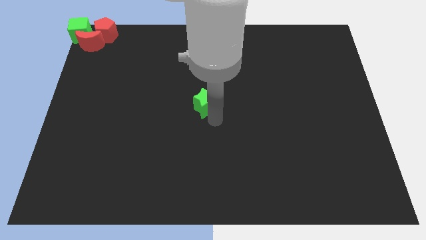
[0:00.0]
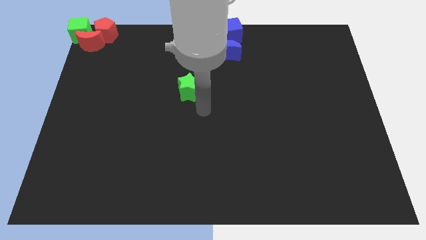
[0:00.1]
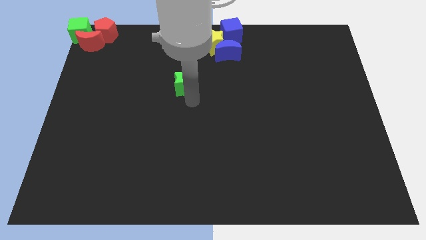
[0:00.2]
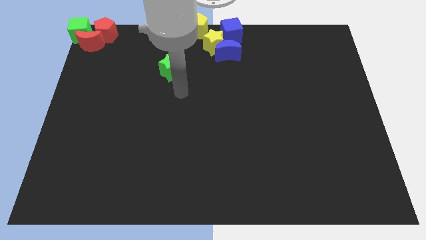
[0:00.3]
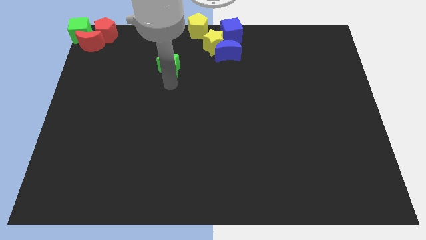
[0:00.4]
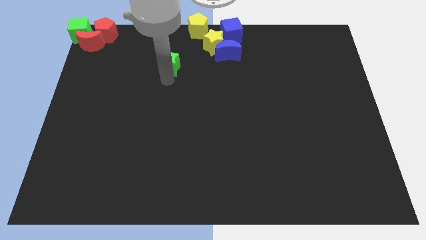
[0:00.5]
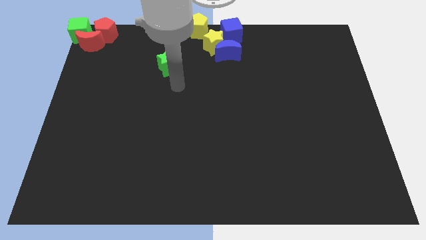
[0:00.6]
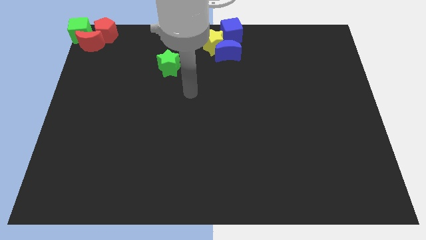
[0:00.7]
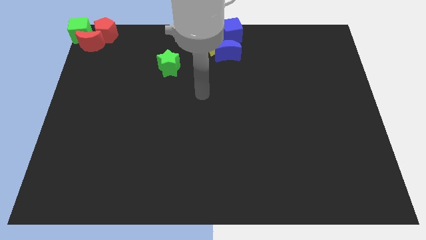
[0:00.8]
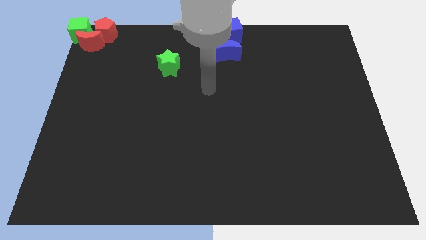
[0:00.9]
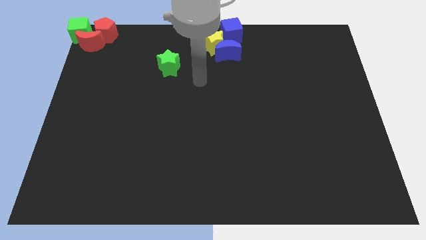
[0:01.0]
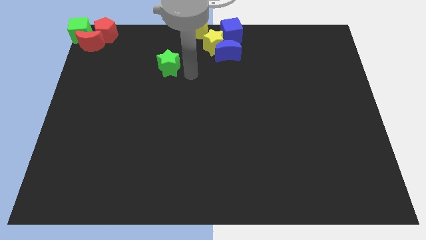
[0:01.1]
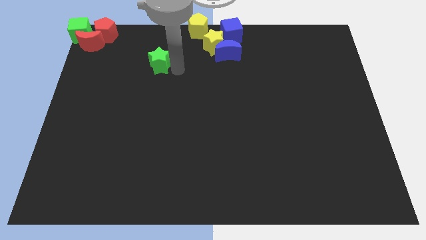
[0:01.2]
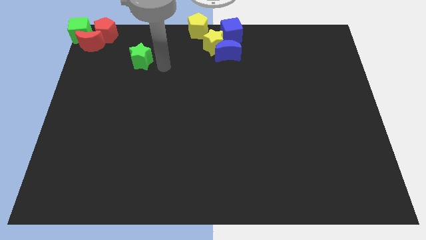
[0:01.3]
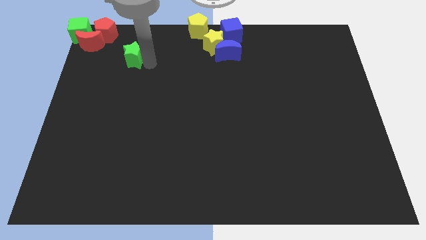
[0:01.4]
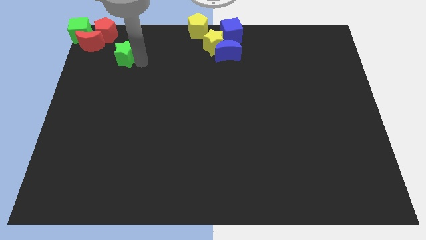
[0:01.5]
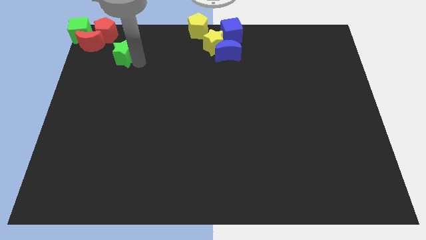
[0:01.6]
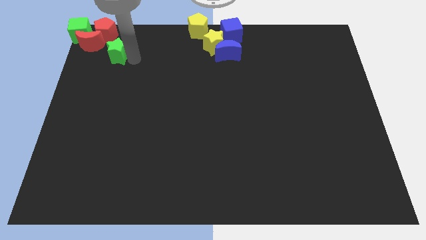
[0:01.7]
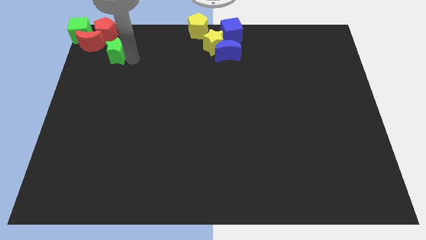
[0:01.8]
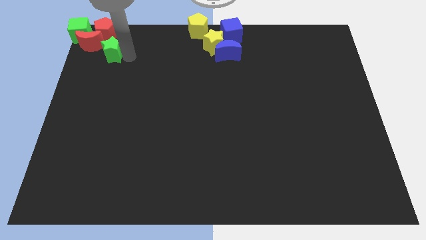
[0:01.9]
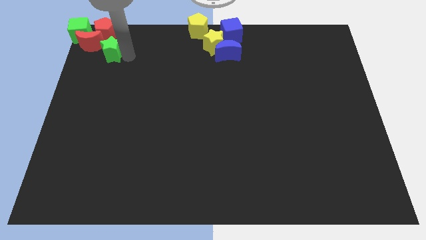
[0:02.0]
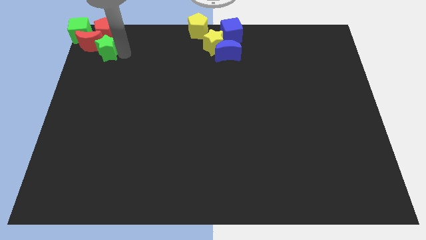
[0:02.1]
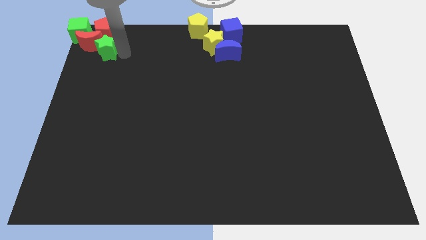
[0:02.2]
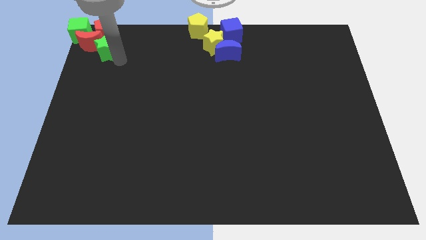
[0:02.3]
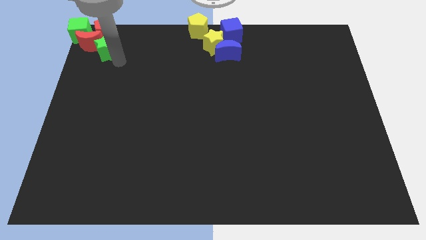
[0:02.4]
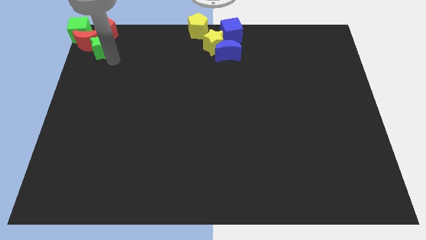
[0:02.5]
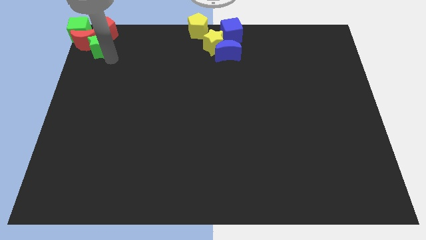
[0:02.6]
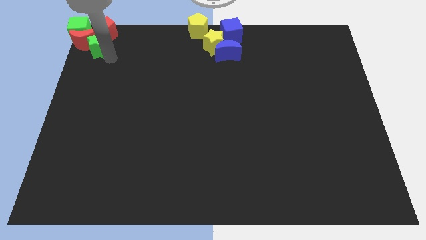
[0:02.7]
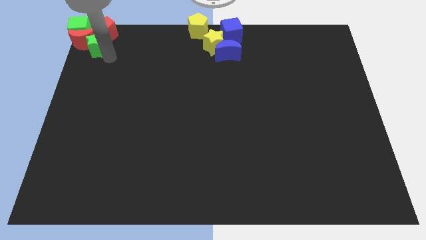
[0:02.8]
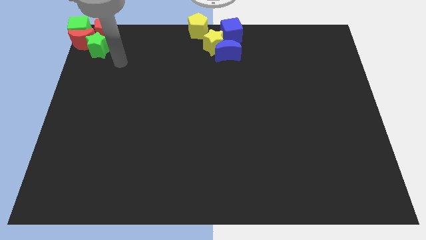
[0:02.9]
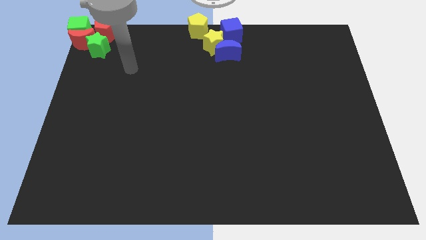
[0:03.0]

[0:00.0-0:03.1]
push green star into red pentagon

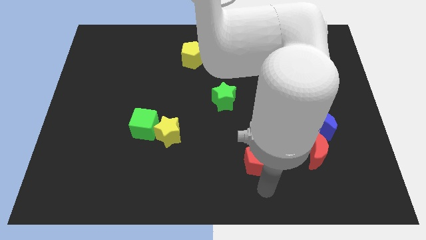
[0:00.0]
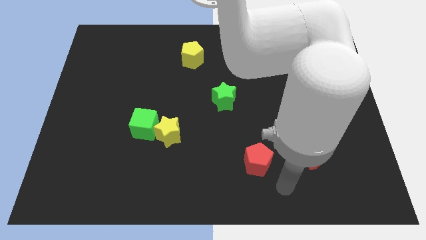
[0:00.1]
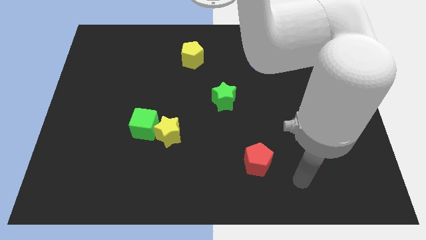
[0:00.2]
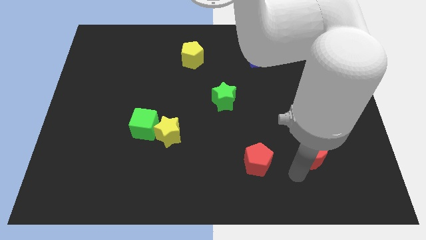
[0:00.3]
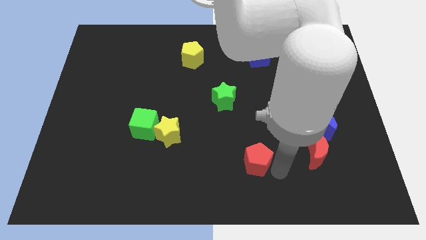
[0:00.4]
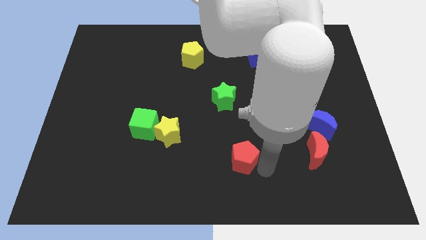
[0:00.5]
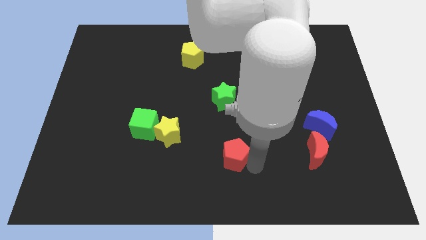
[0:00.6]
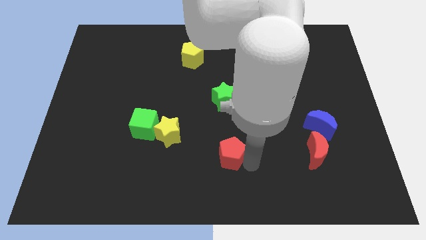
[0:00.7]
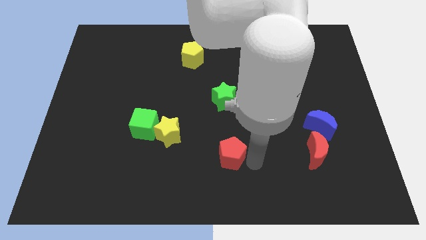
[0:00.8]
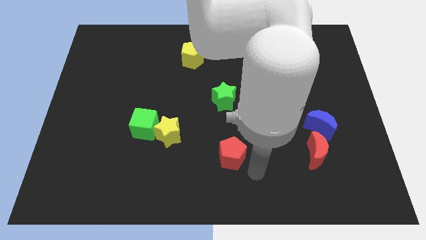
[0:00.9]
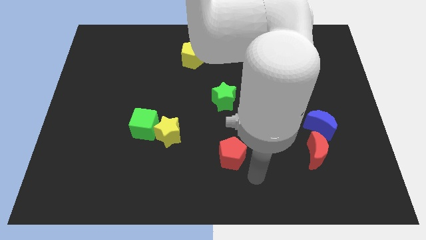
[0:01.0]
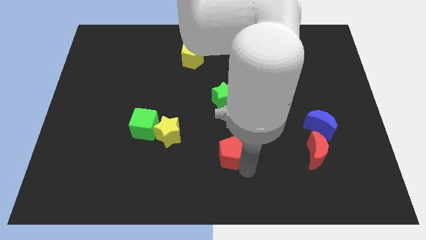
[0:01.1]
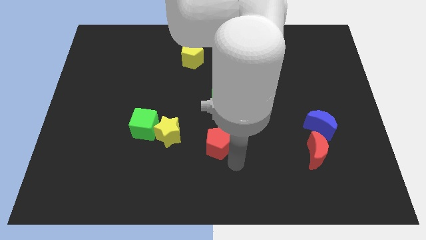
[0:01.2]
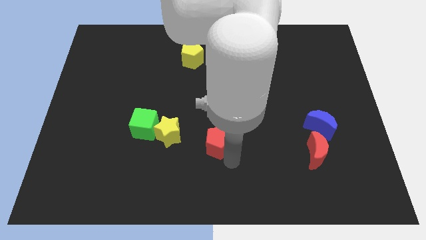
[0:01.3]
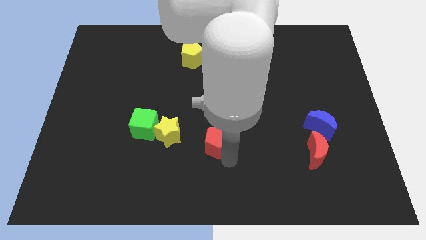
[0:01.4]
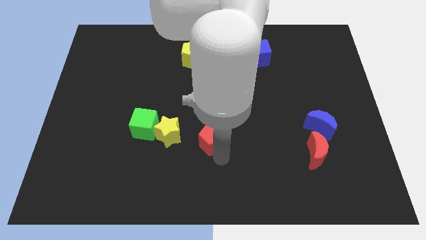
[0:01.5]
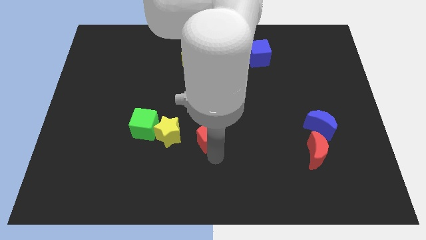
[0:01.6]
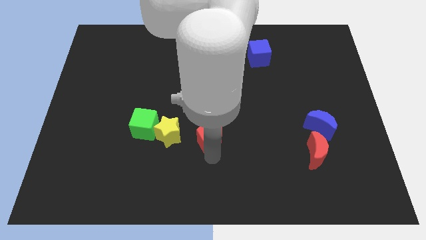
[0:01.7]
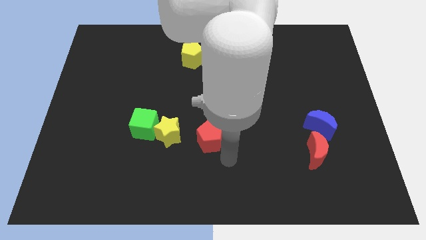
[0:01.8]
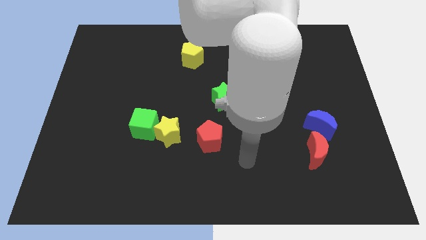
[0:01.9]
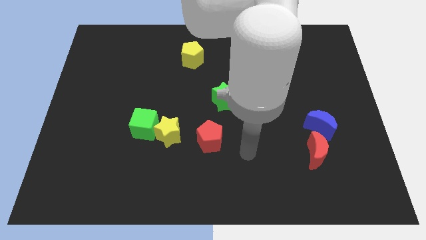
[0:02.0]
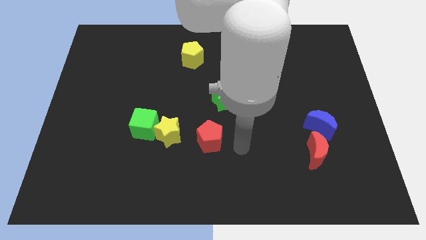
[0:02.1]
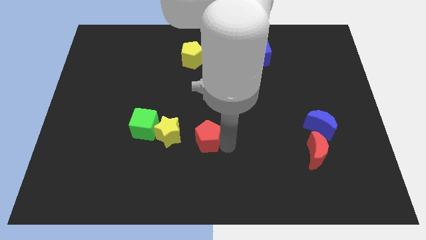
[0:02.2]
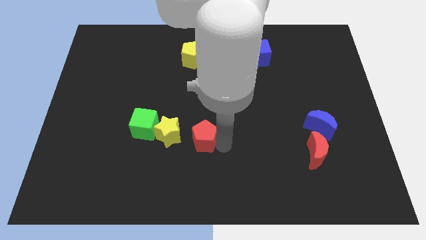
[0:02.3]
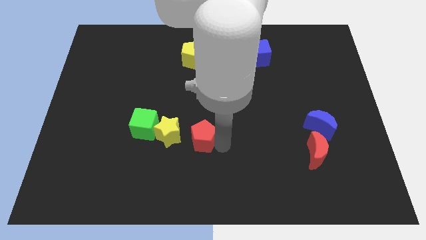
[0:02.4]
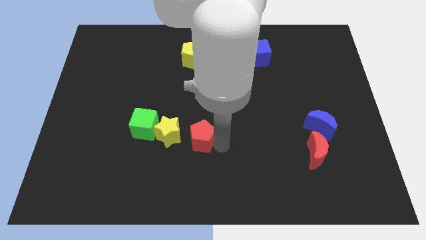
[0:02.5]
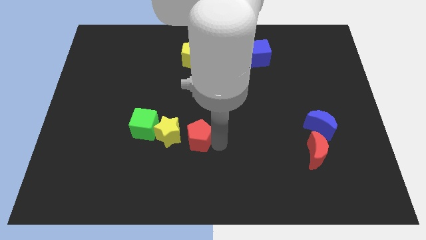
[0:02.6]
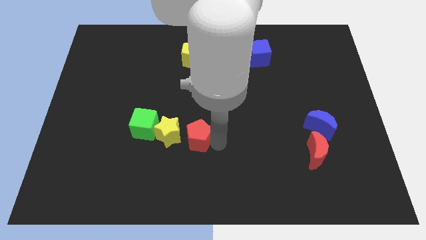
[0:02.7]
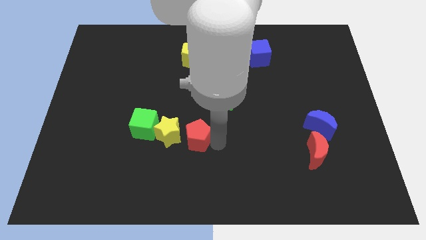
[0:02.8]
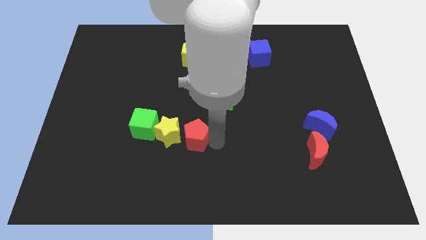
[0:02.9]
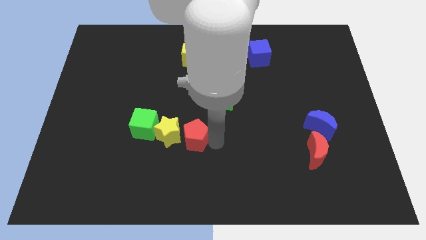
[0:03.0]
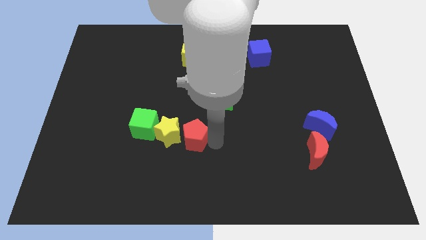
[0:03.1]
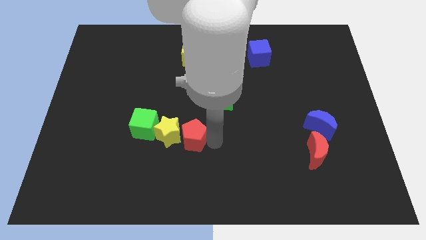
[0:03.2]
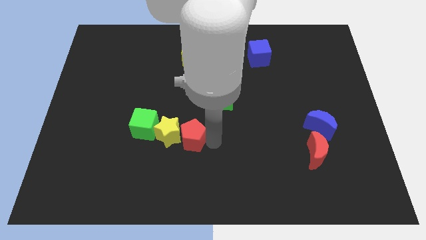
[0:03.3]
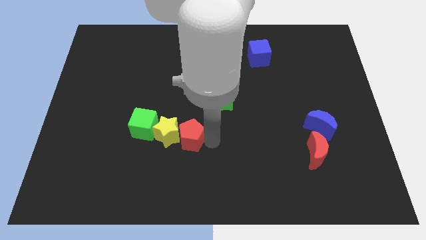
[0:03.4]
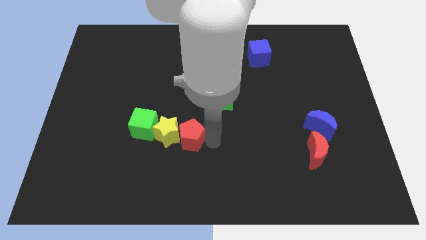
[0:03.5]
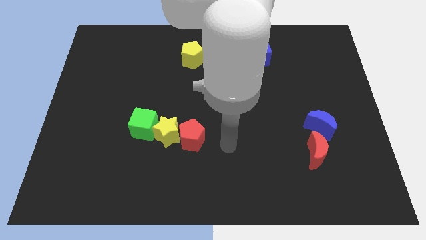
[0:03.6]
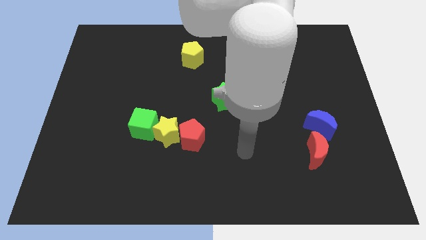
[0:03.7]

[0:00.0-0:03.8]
slide red pentagon close to the yellow star

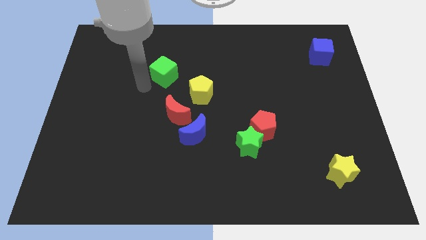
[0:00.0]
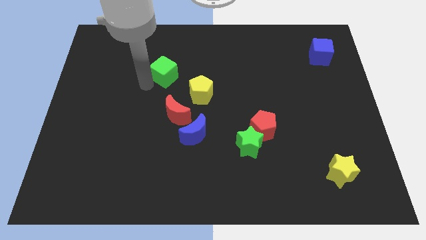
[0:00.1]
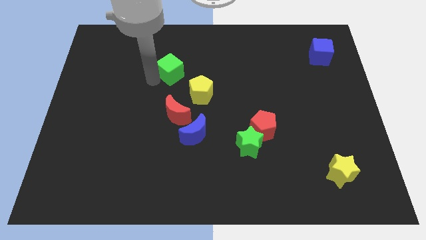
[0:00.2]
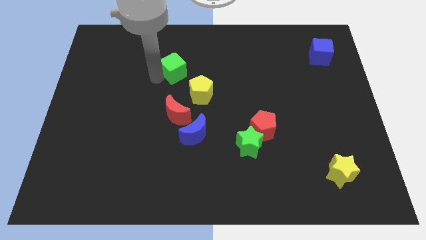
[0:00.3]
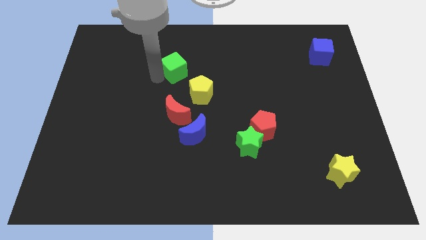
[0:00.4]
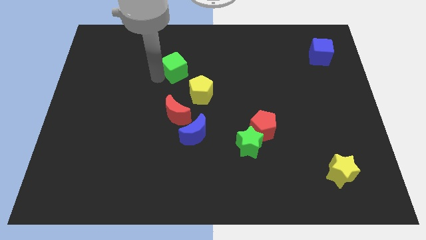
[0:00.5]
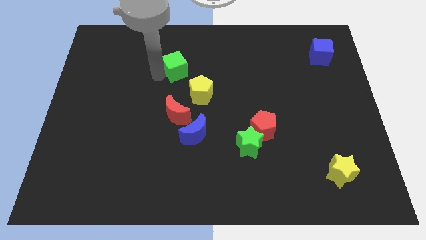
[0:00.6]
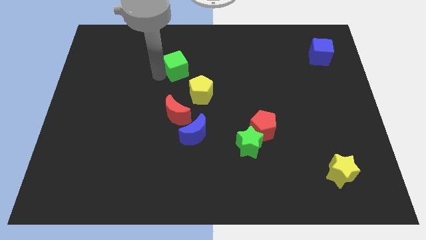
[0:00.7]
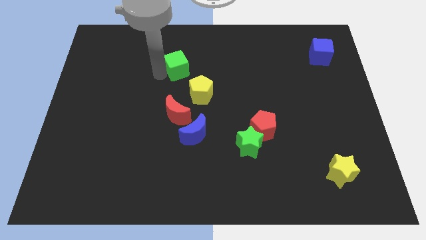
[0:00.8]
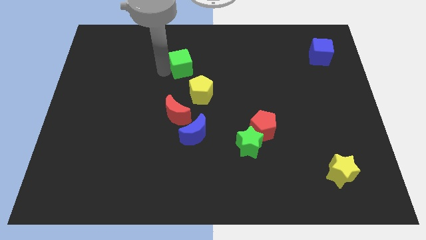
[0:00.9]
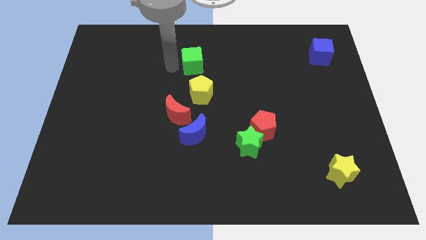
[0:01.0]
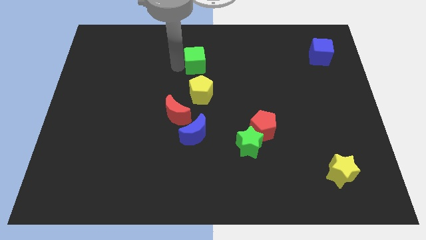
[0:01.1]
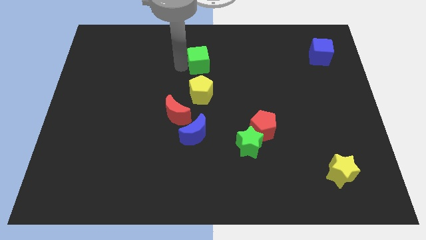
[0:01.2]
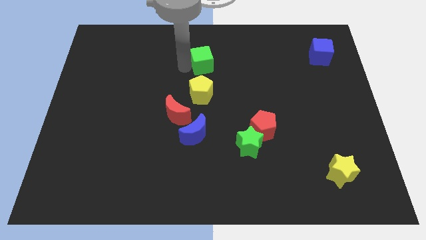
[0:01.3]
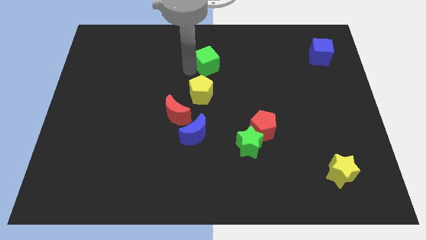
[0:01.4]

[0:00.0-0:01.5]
push green cube above yellow pentagon

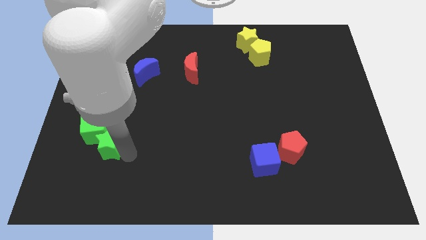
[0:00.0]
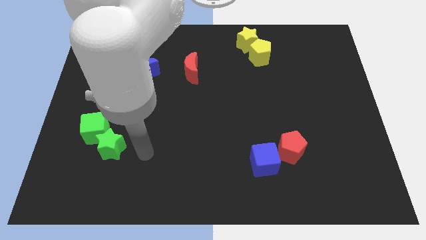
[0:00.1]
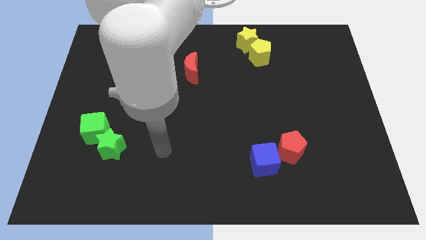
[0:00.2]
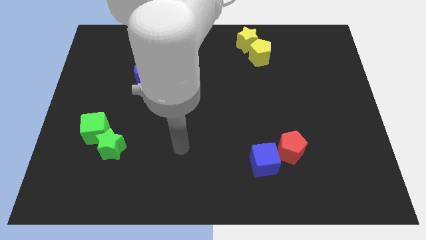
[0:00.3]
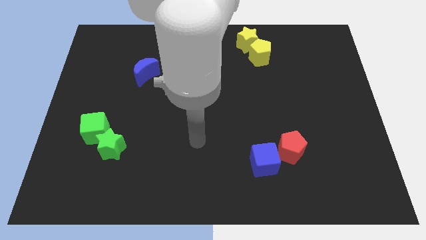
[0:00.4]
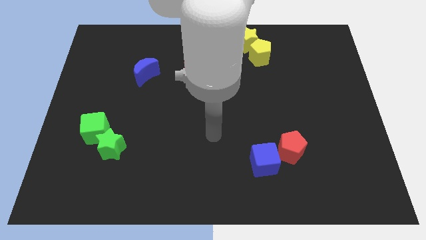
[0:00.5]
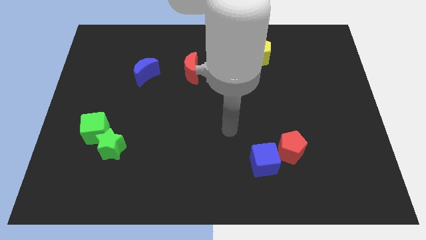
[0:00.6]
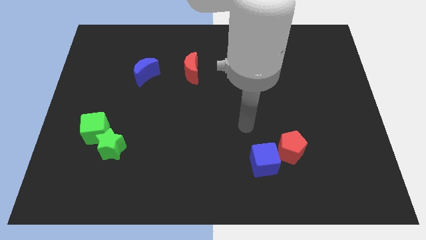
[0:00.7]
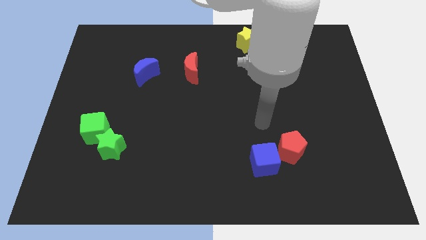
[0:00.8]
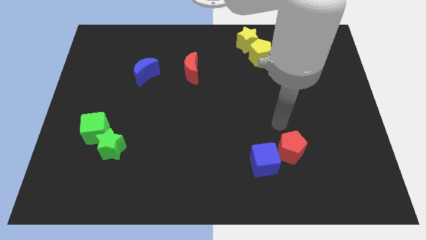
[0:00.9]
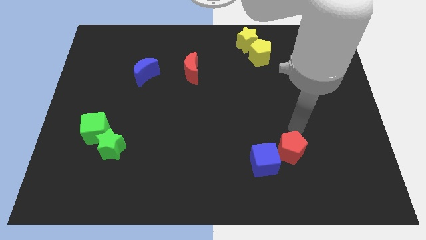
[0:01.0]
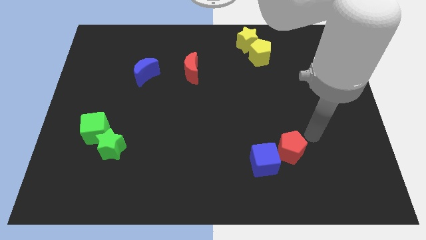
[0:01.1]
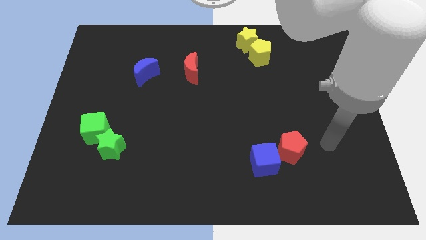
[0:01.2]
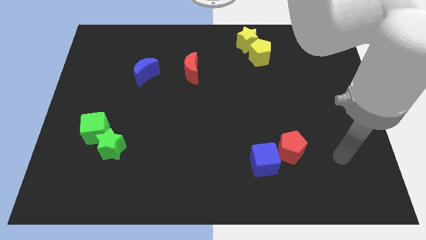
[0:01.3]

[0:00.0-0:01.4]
move the arm from left bottom to right bottom
